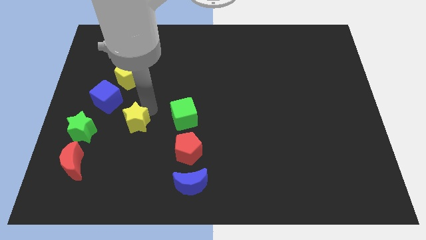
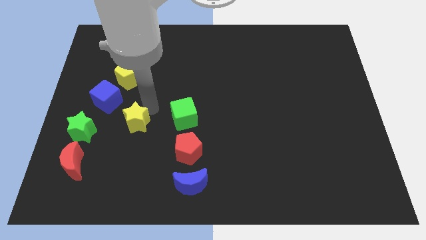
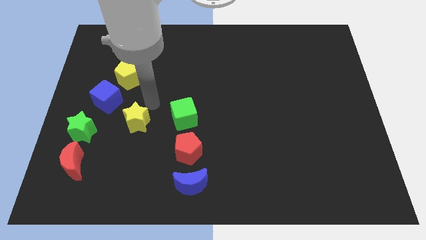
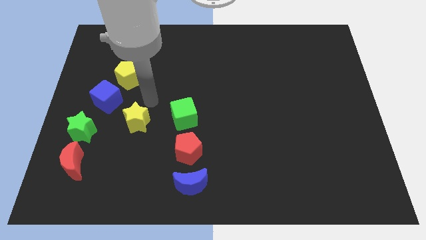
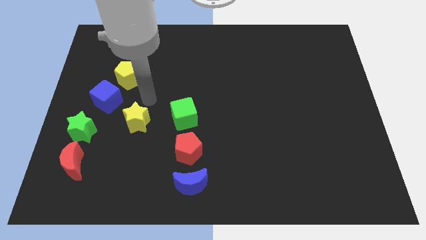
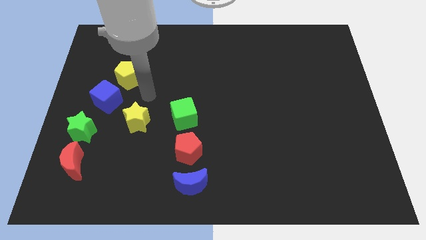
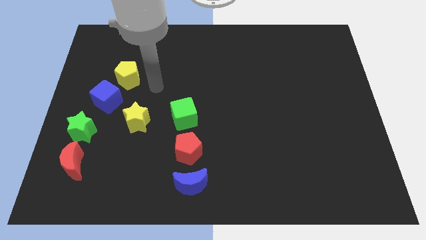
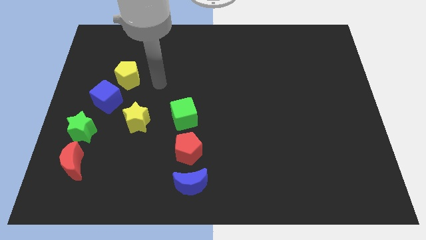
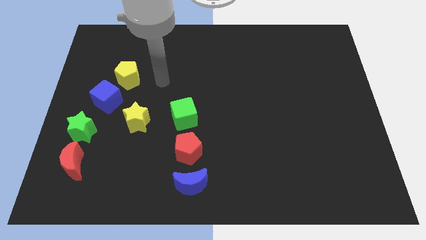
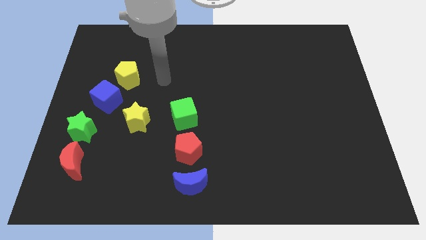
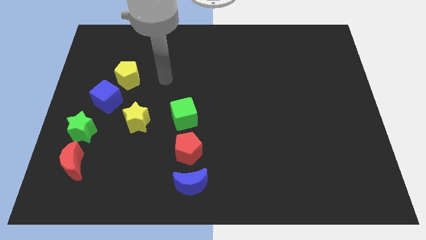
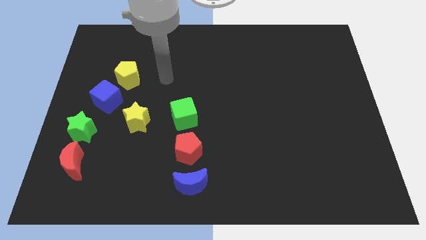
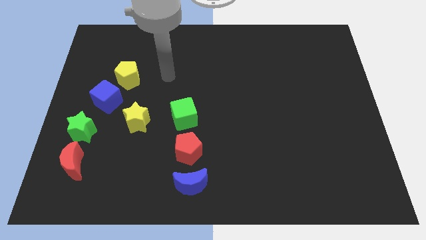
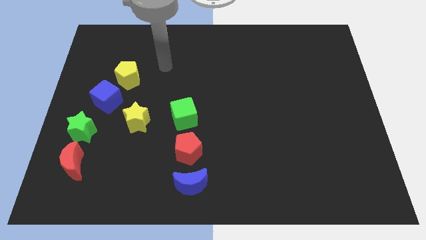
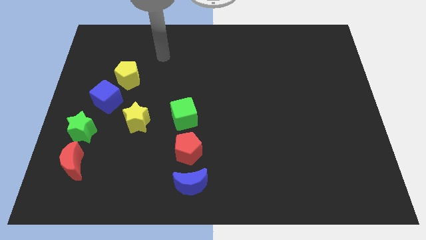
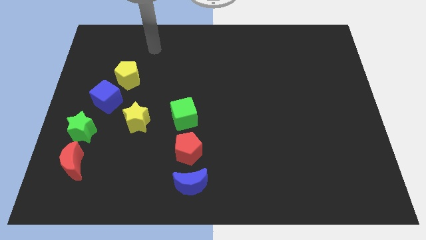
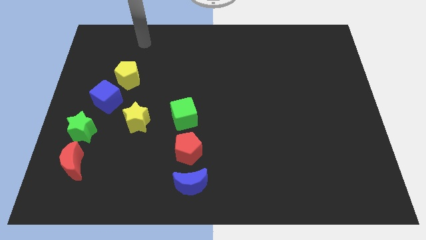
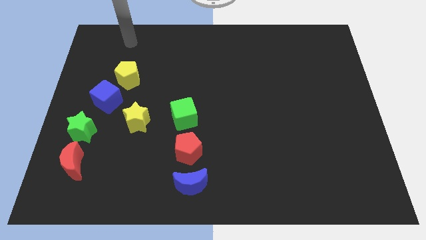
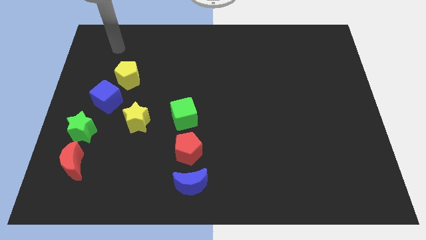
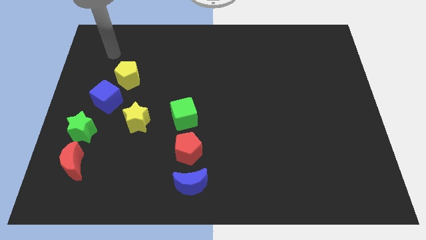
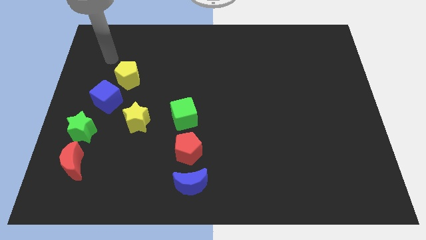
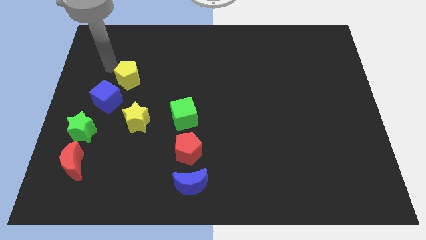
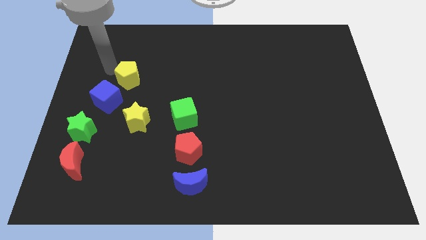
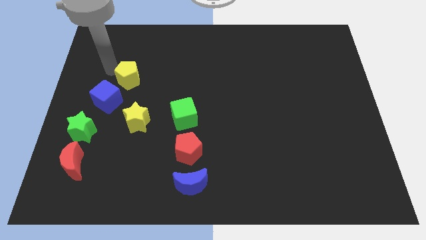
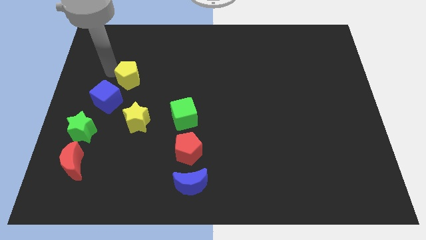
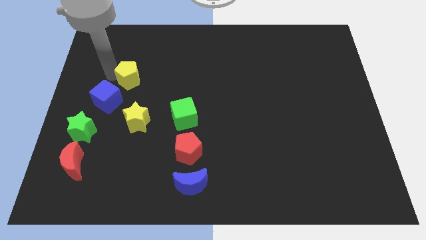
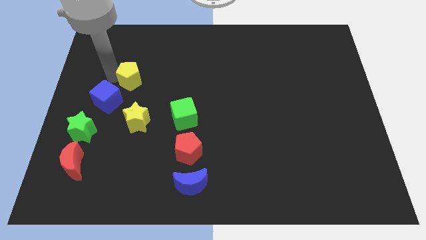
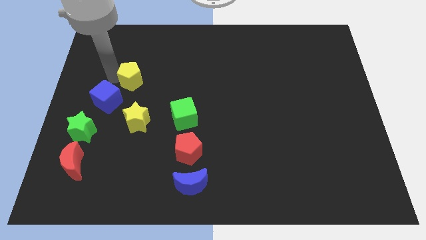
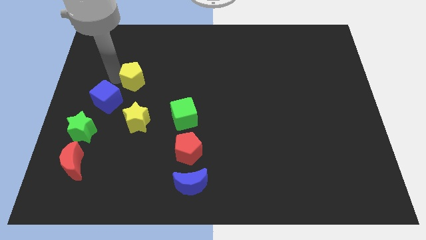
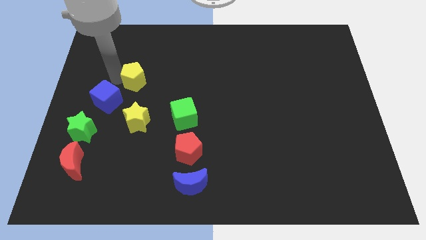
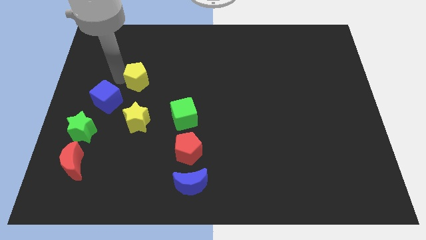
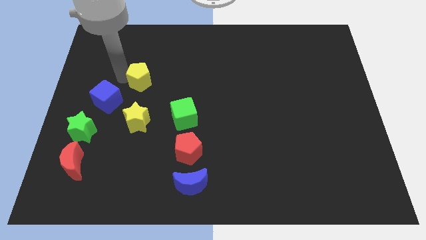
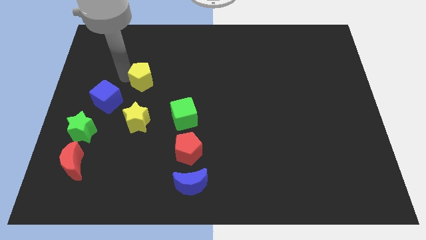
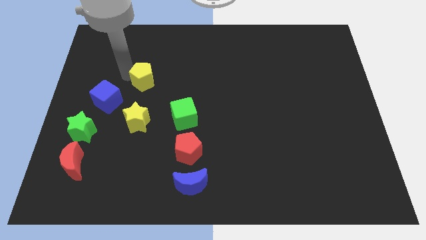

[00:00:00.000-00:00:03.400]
place the yellow pentagon at the top of yellow star

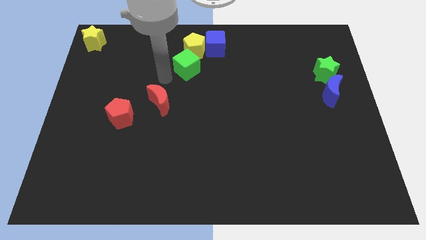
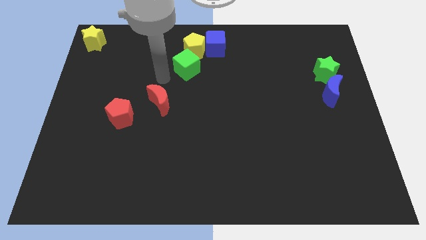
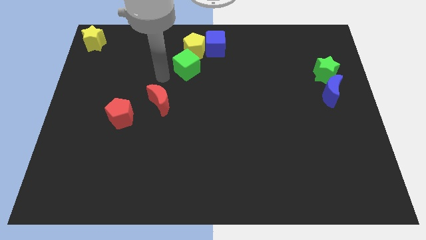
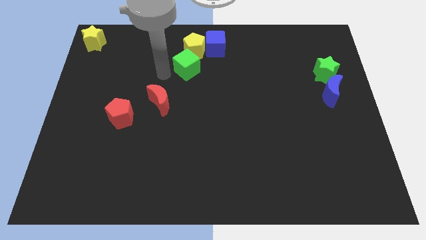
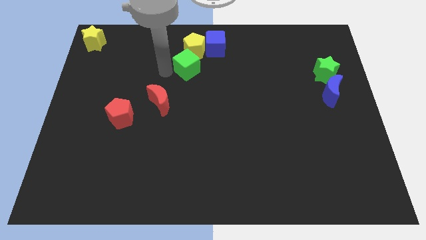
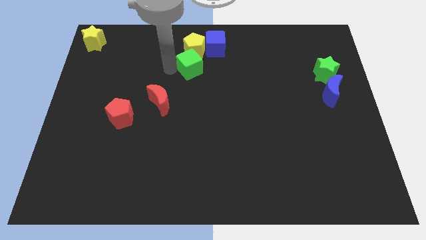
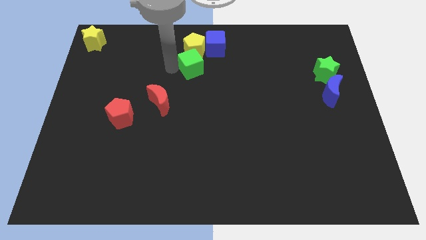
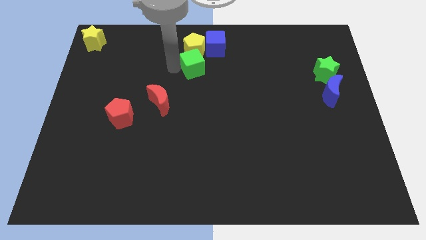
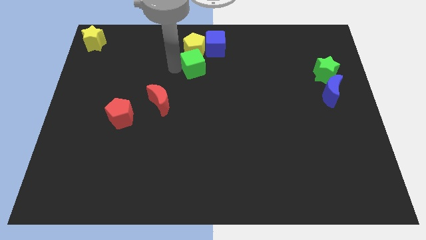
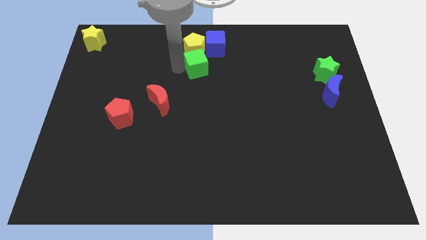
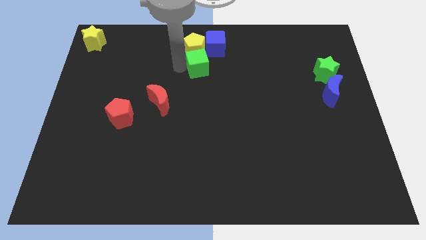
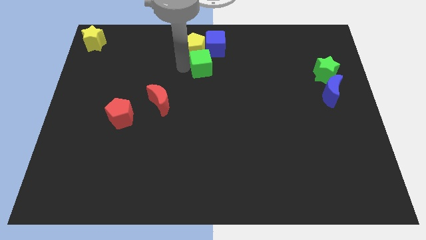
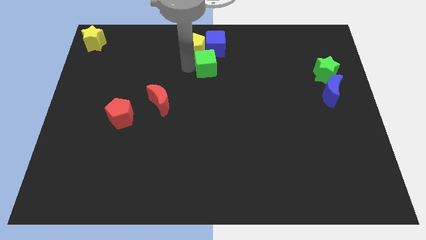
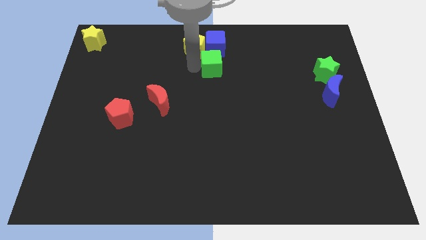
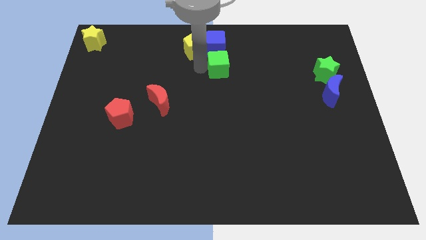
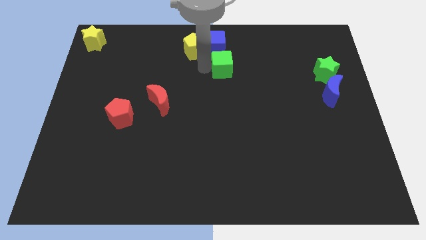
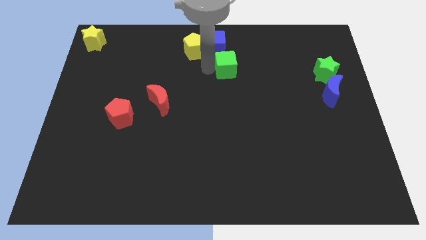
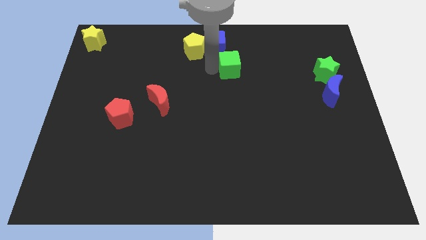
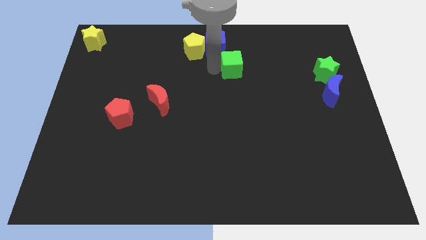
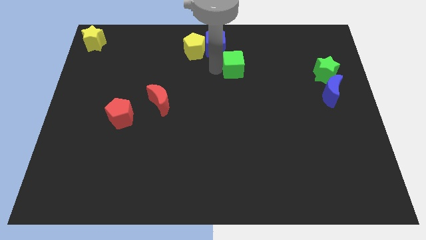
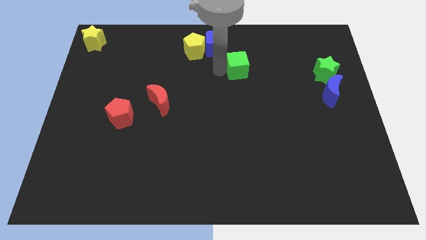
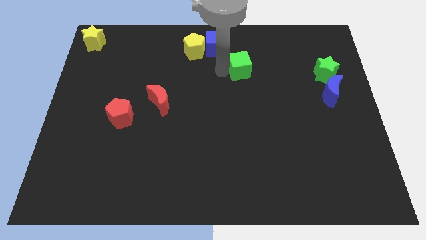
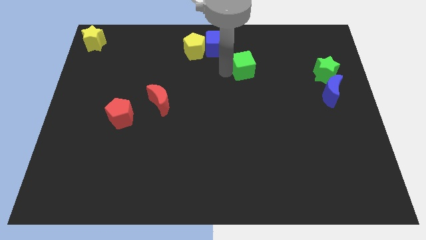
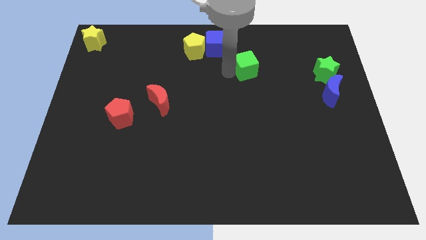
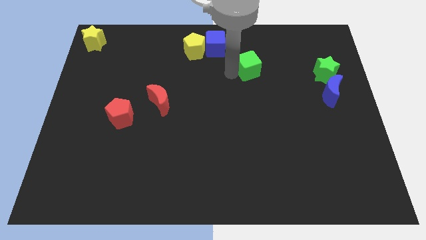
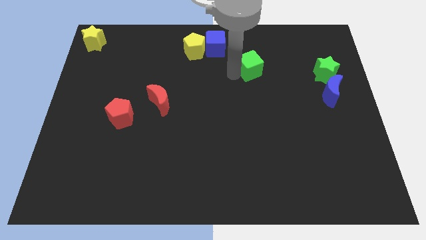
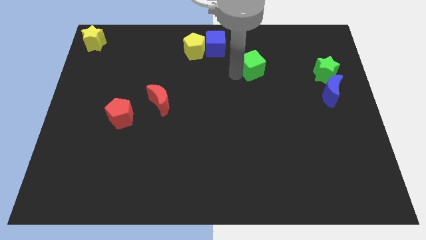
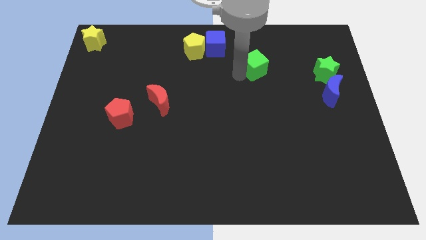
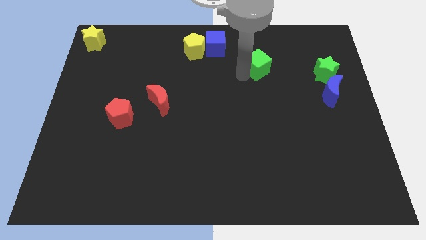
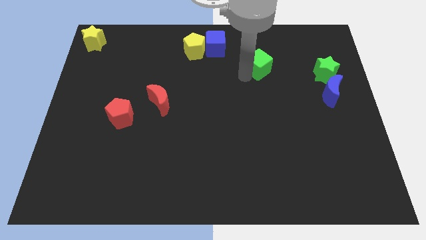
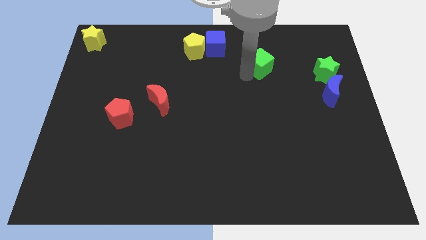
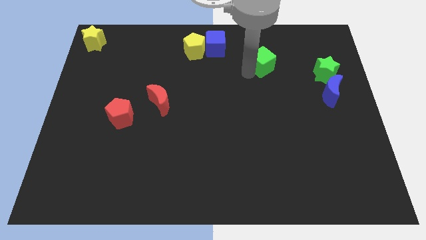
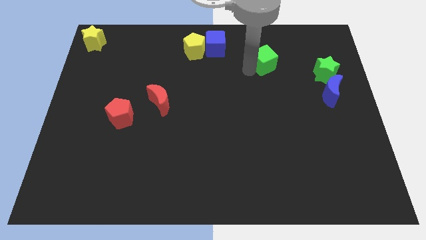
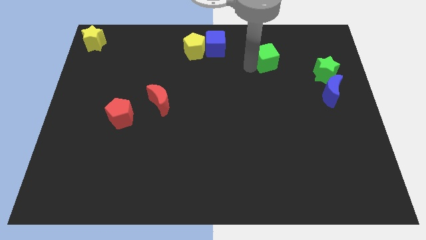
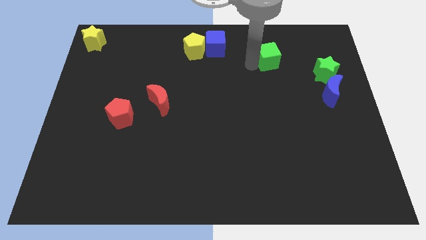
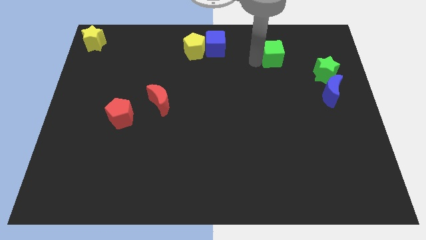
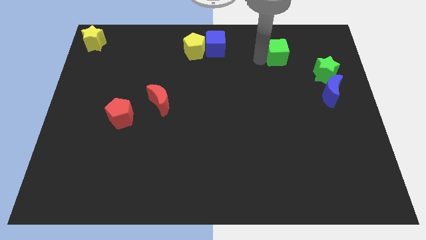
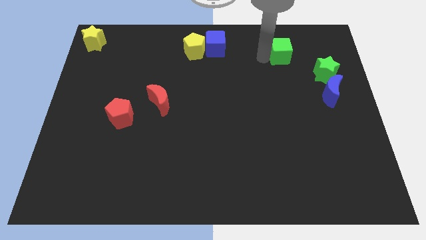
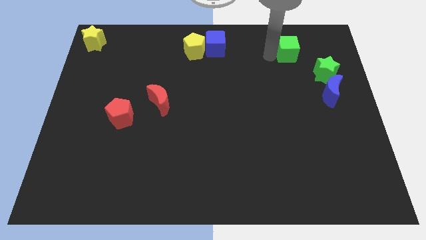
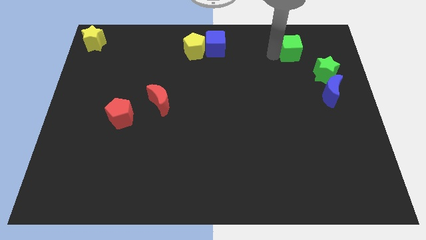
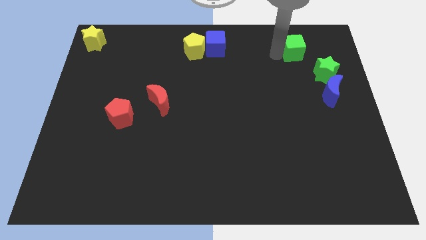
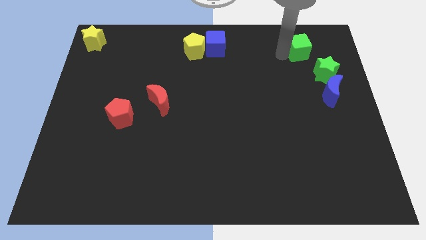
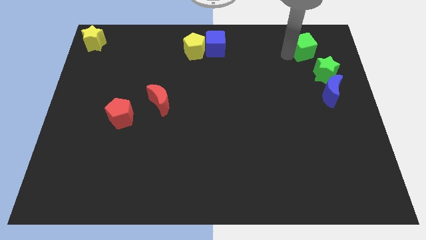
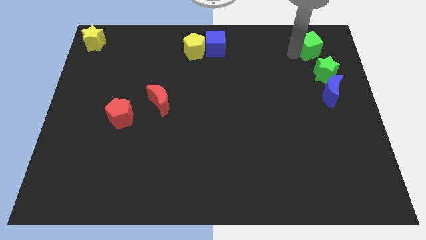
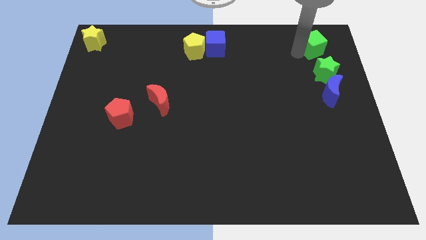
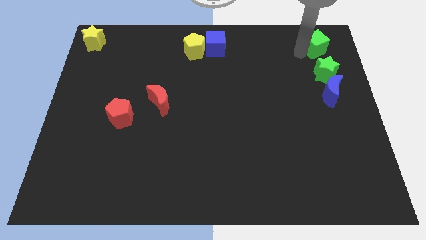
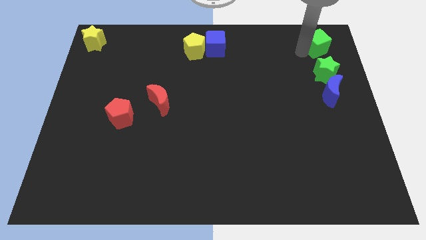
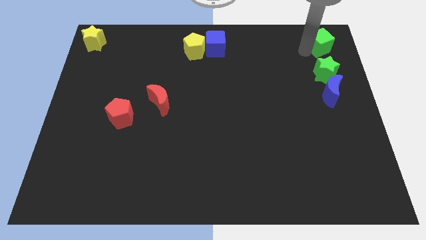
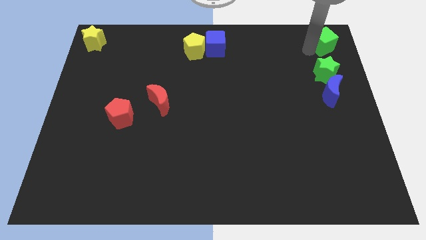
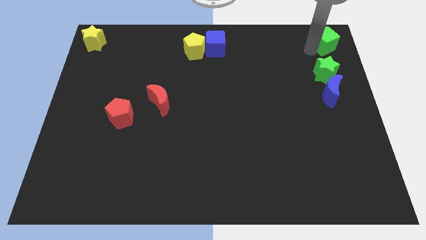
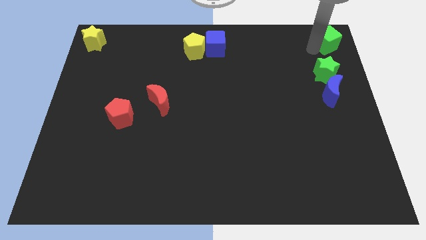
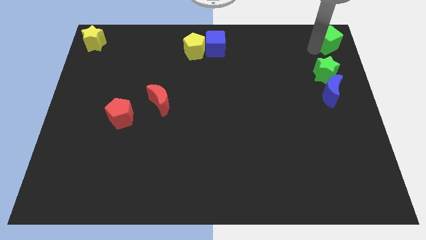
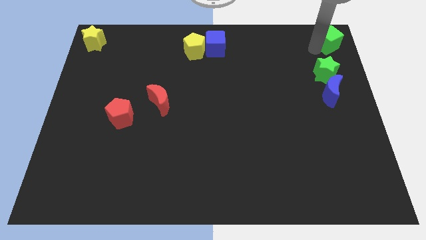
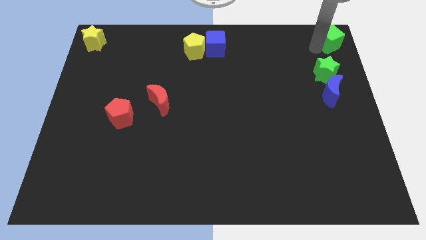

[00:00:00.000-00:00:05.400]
drag green cube towards top right corner of the board

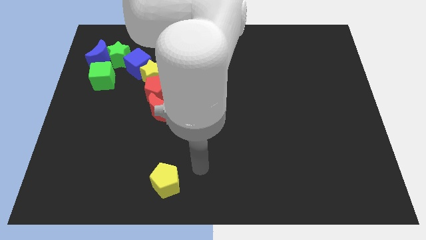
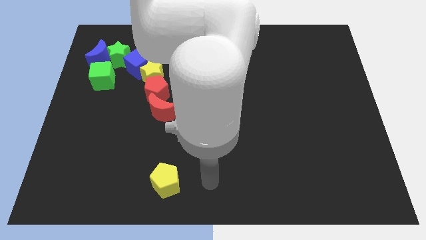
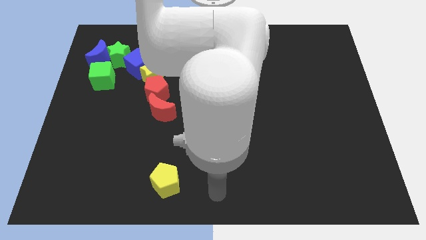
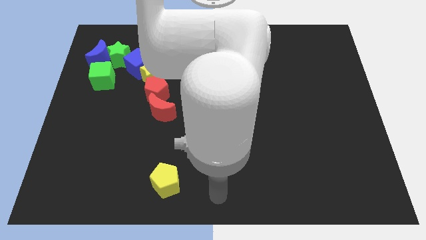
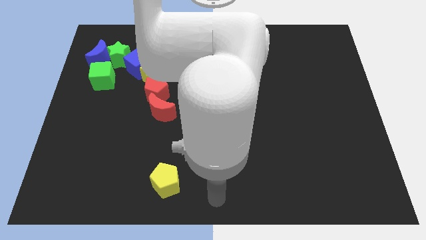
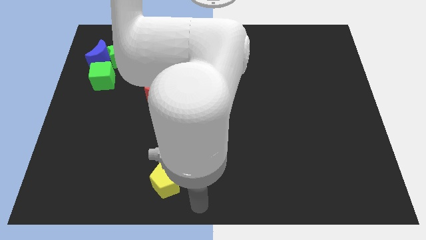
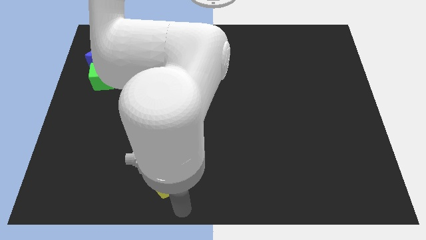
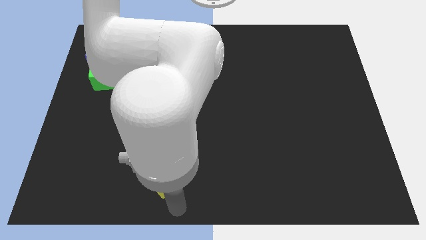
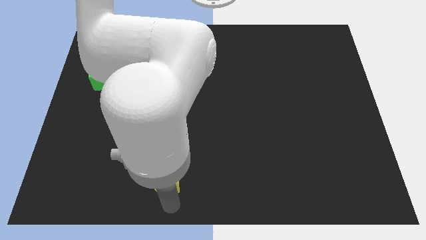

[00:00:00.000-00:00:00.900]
place the arm down to the yellow pentagon
